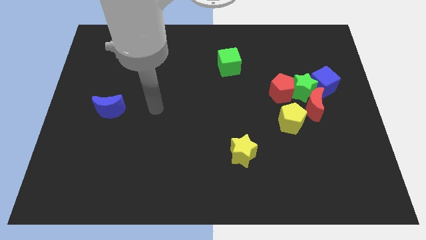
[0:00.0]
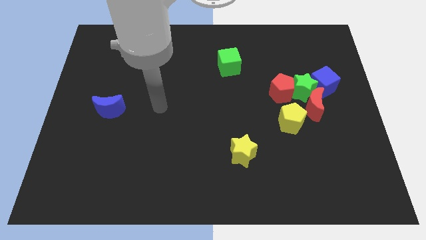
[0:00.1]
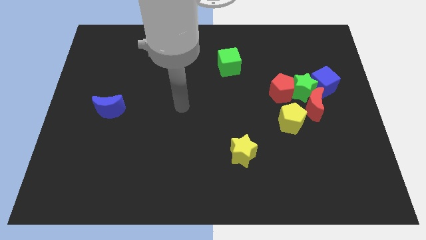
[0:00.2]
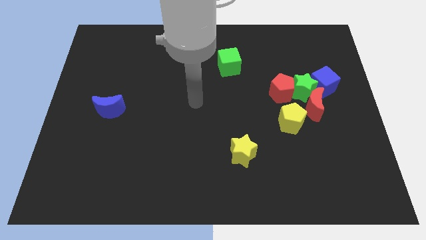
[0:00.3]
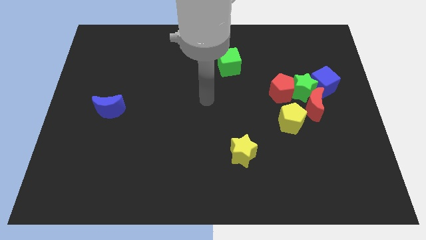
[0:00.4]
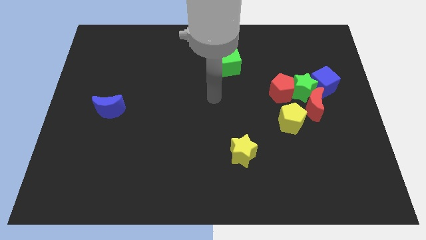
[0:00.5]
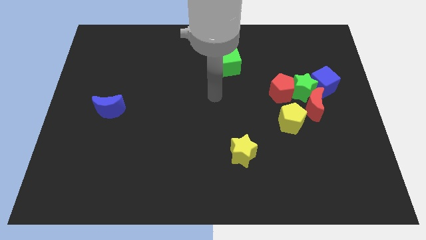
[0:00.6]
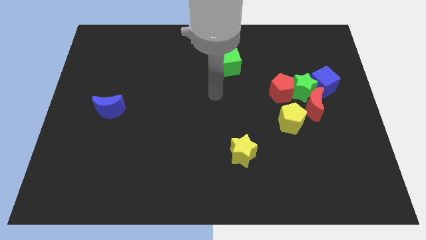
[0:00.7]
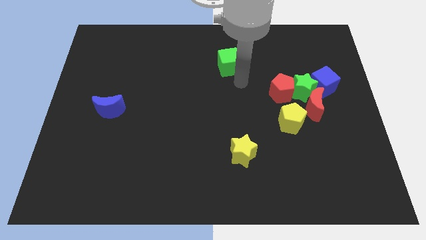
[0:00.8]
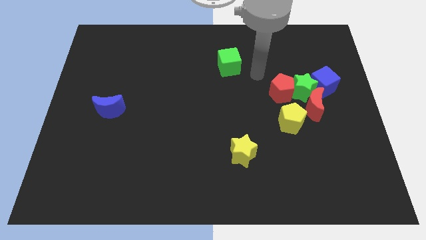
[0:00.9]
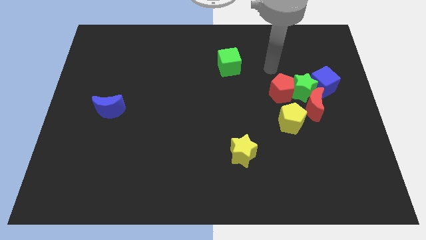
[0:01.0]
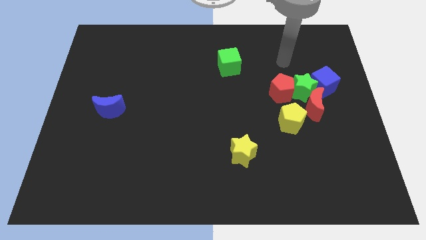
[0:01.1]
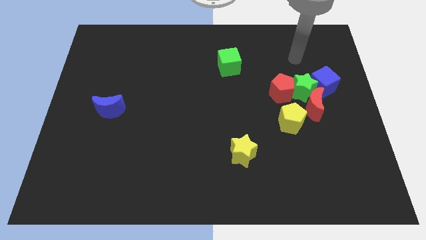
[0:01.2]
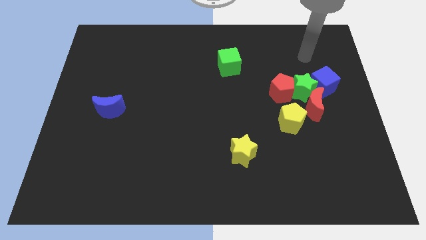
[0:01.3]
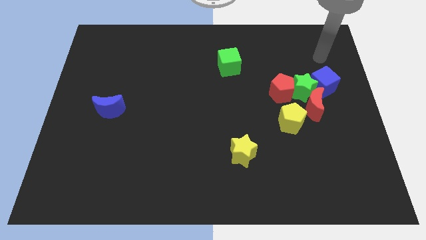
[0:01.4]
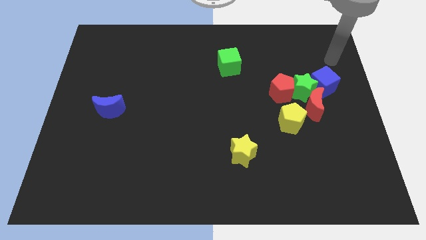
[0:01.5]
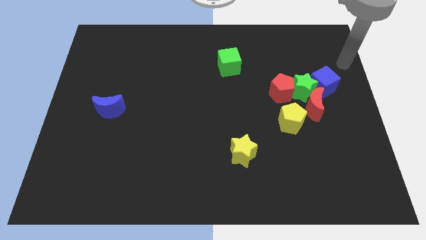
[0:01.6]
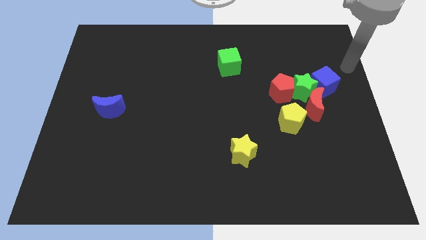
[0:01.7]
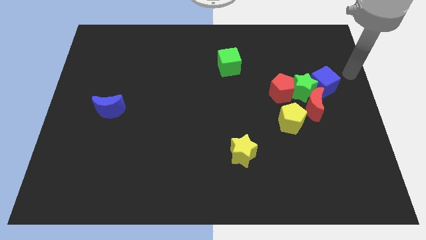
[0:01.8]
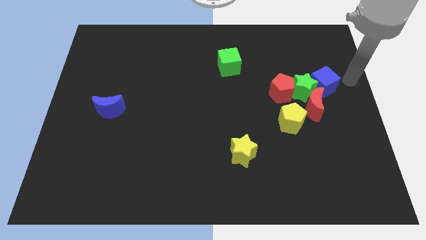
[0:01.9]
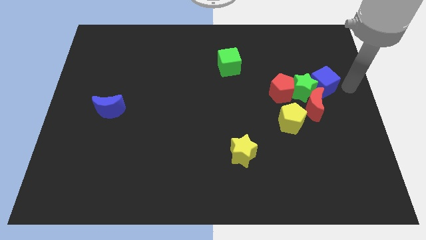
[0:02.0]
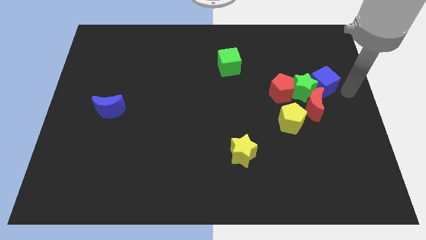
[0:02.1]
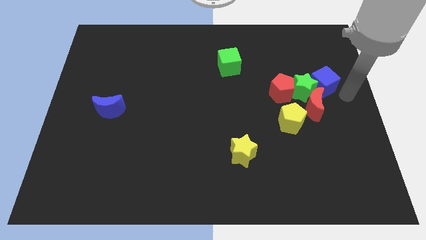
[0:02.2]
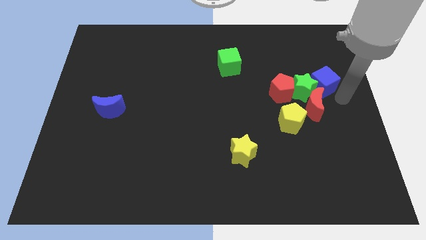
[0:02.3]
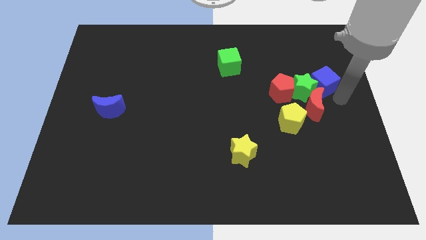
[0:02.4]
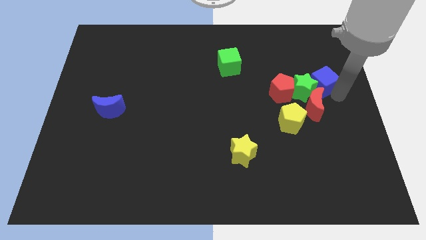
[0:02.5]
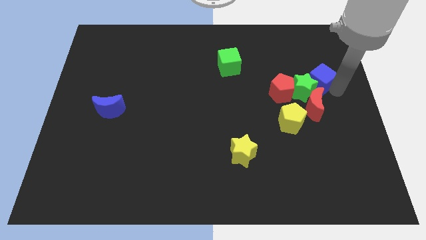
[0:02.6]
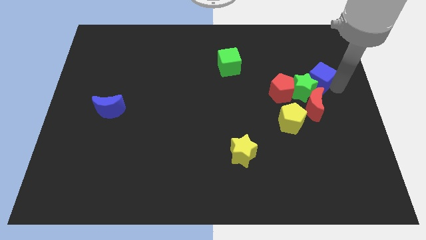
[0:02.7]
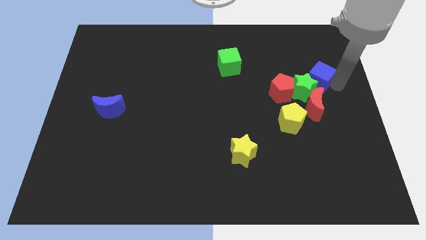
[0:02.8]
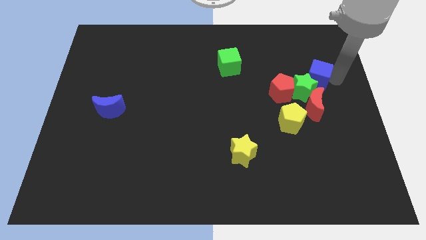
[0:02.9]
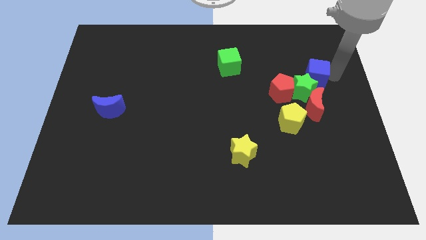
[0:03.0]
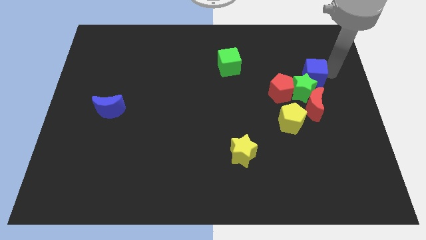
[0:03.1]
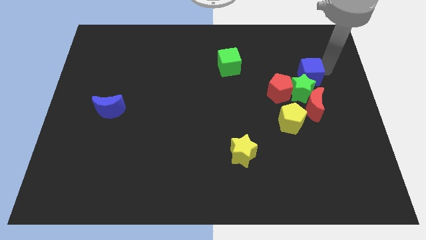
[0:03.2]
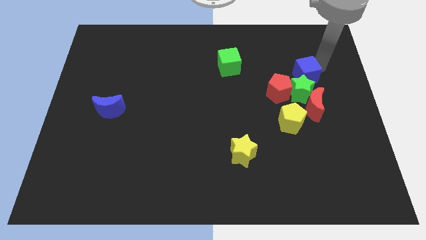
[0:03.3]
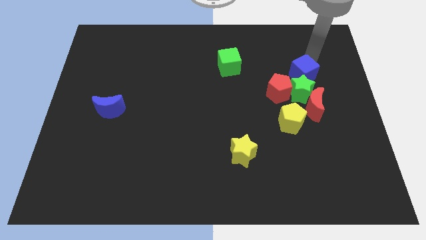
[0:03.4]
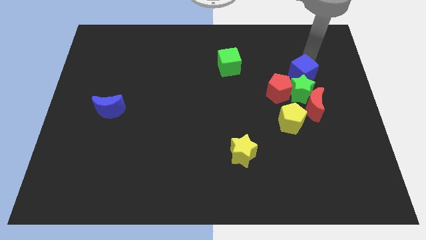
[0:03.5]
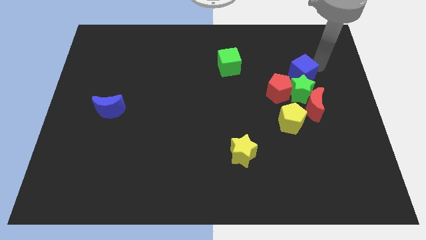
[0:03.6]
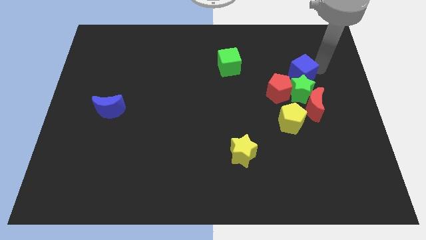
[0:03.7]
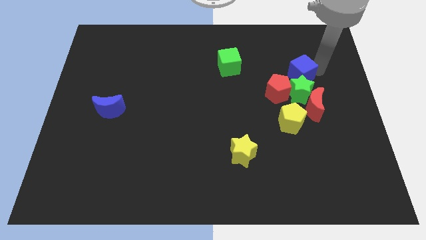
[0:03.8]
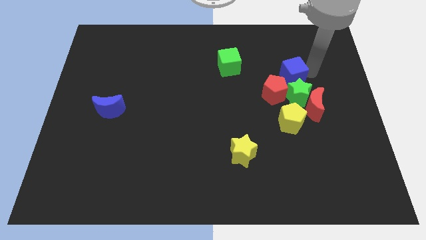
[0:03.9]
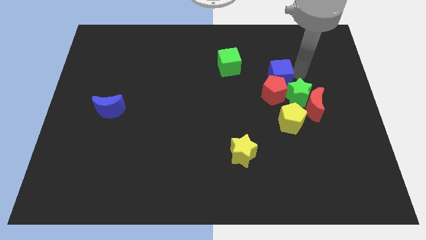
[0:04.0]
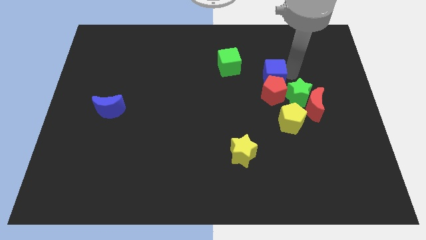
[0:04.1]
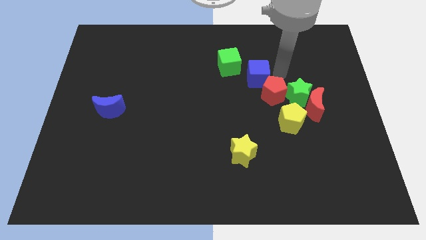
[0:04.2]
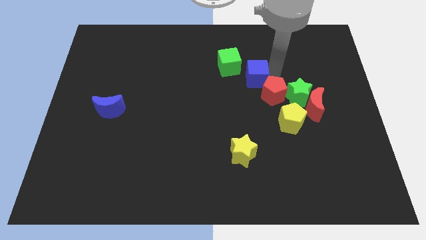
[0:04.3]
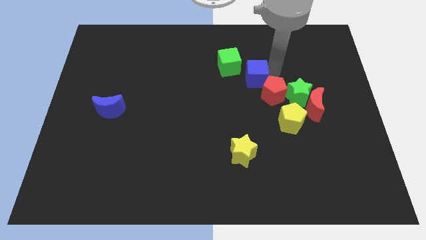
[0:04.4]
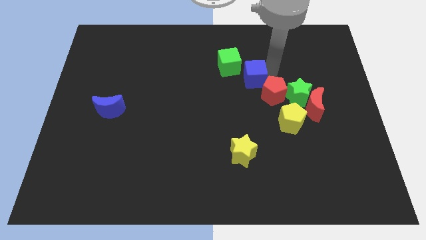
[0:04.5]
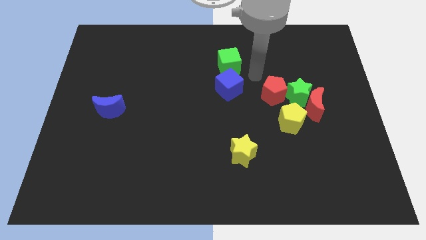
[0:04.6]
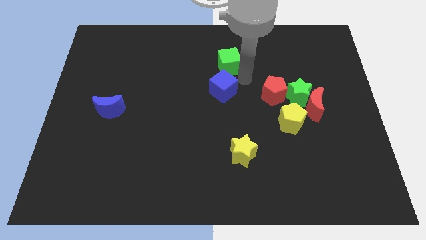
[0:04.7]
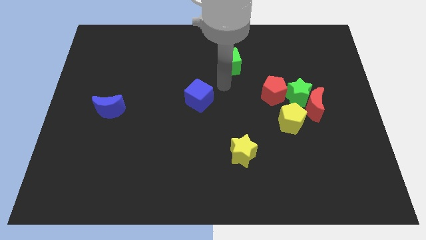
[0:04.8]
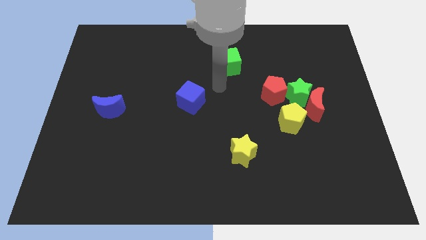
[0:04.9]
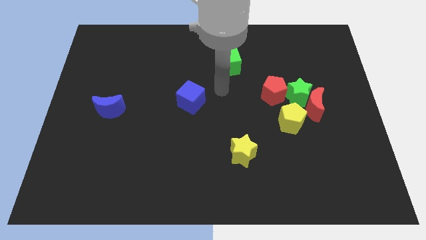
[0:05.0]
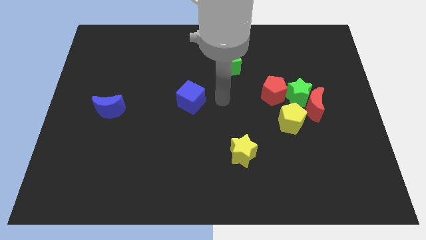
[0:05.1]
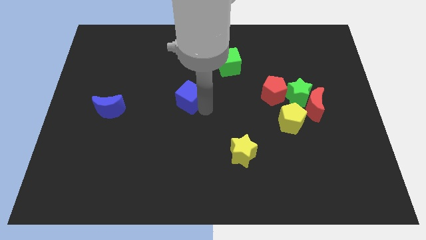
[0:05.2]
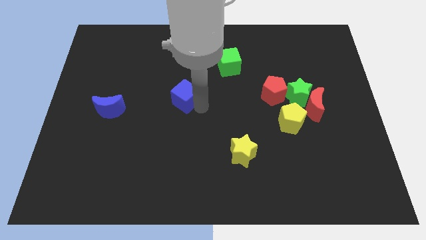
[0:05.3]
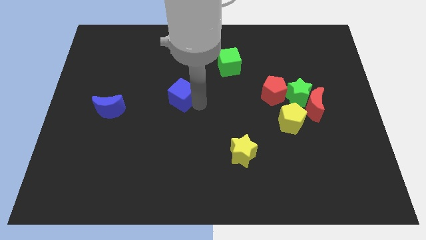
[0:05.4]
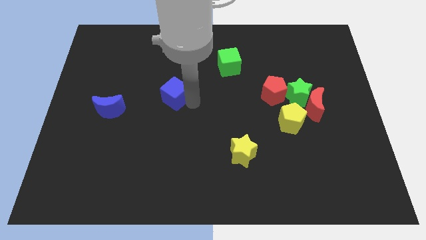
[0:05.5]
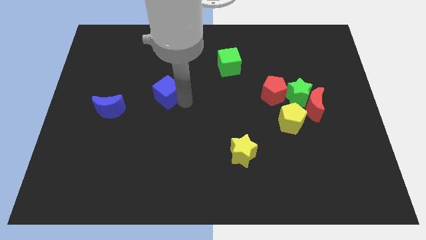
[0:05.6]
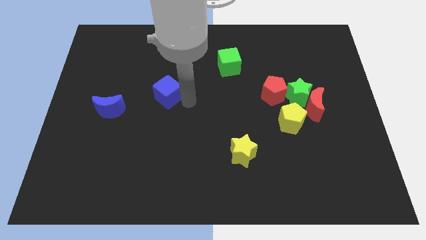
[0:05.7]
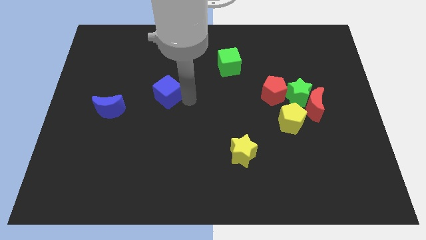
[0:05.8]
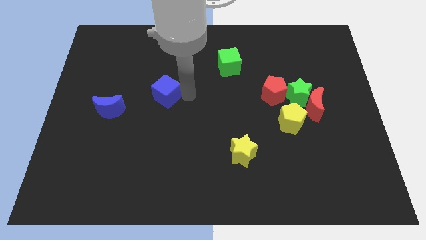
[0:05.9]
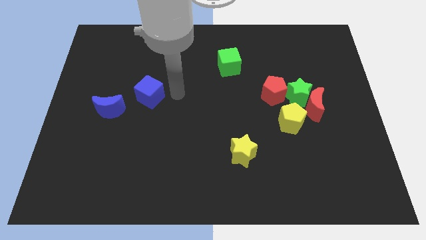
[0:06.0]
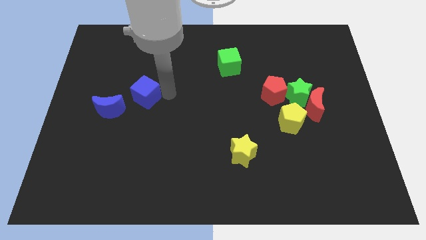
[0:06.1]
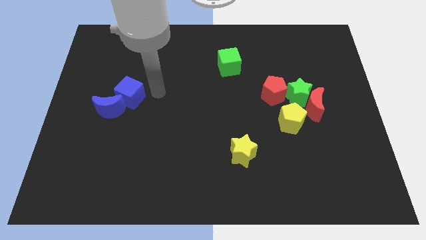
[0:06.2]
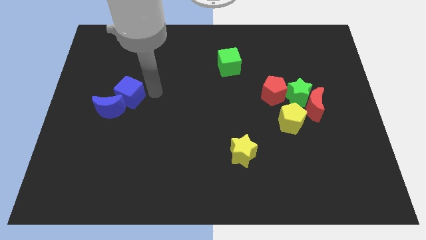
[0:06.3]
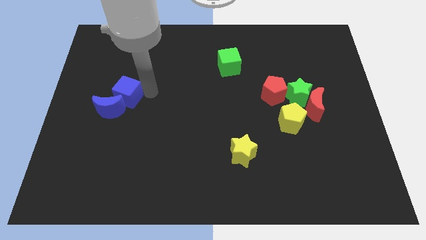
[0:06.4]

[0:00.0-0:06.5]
slide the blue cube towards the blue moon

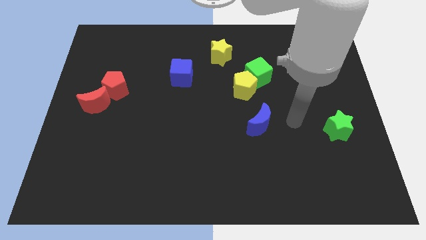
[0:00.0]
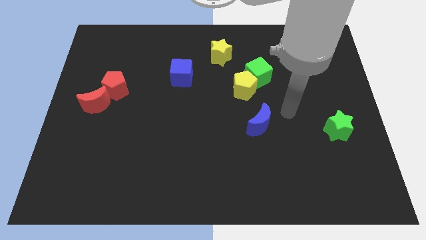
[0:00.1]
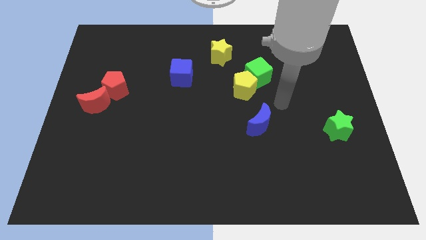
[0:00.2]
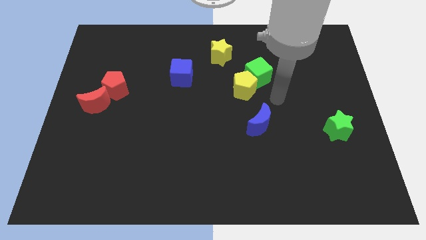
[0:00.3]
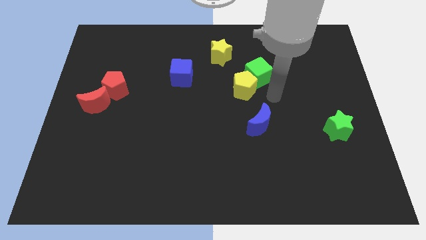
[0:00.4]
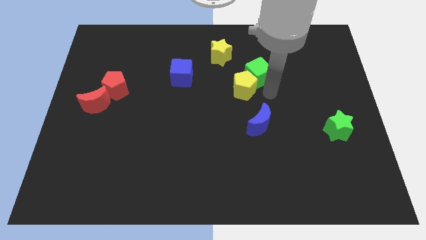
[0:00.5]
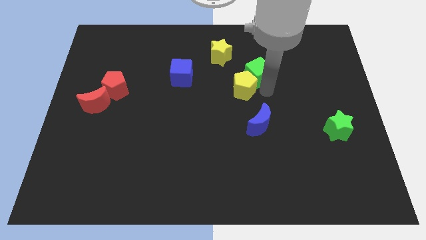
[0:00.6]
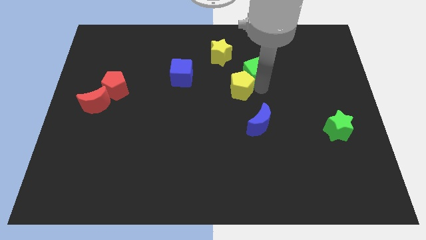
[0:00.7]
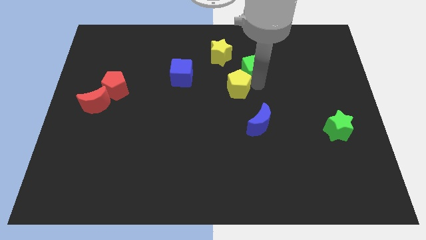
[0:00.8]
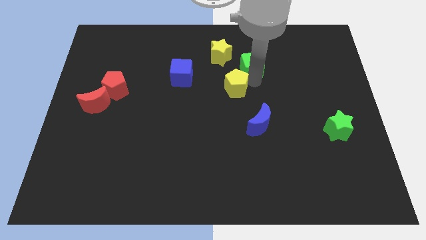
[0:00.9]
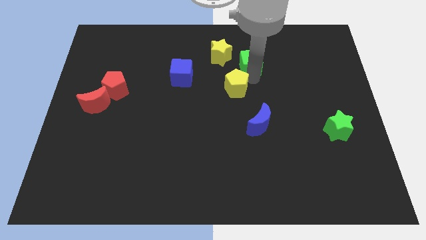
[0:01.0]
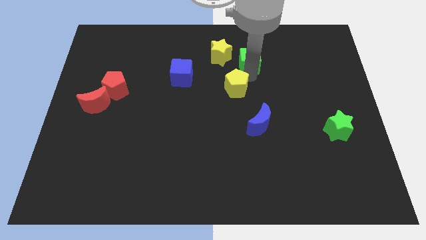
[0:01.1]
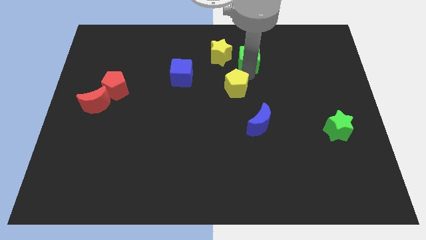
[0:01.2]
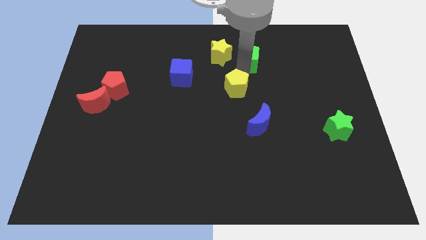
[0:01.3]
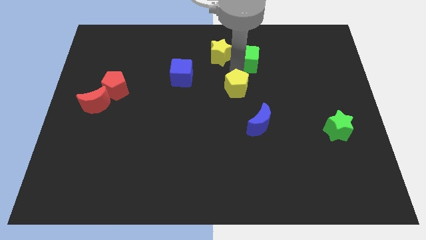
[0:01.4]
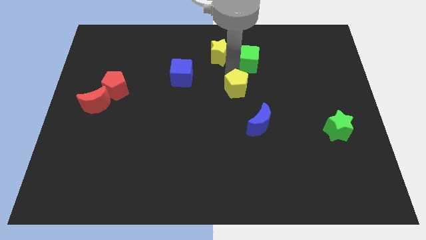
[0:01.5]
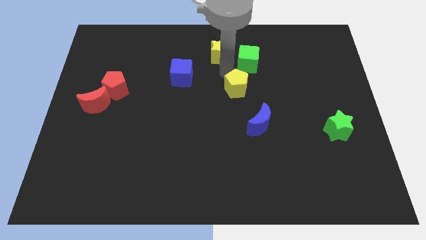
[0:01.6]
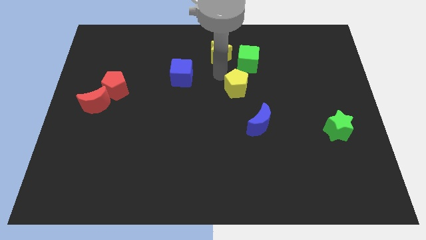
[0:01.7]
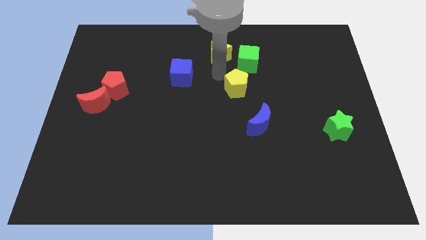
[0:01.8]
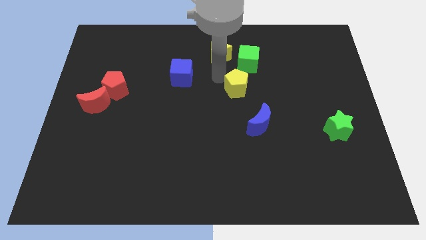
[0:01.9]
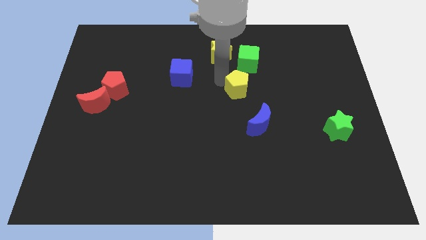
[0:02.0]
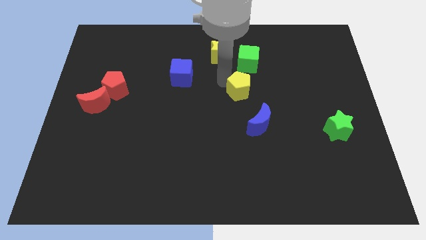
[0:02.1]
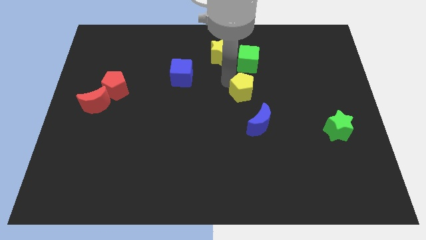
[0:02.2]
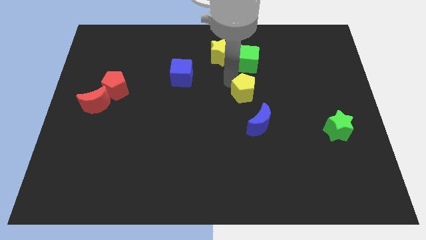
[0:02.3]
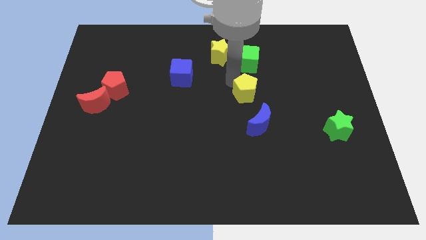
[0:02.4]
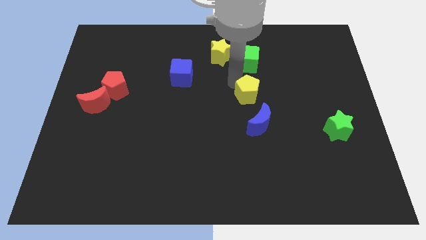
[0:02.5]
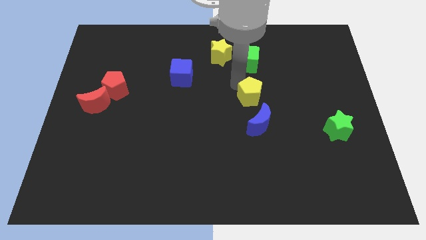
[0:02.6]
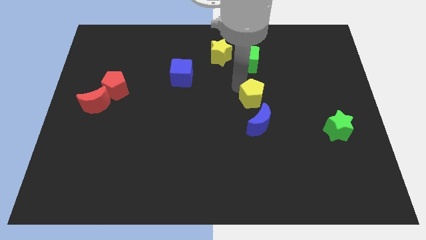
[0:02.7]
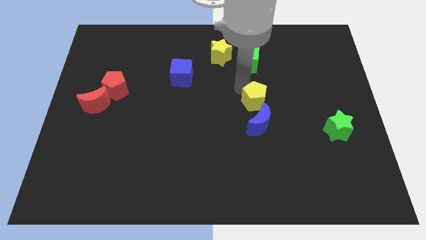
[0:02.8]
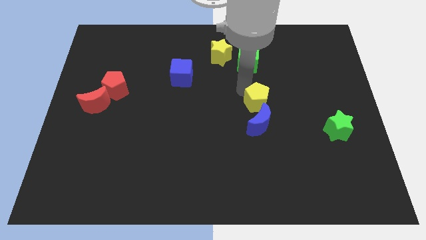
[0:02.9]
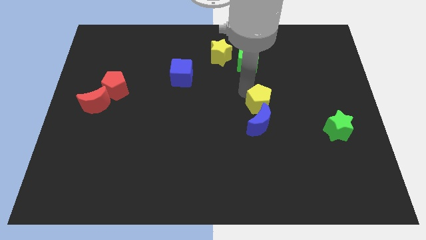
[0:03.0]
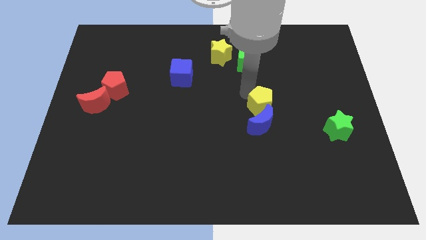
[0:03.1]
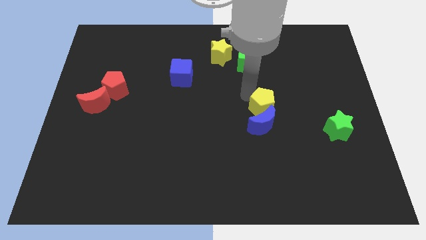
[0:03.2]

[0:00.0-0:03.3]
move the yellow pentagon towards the blue moon
